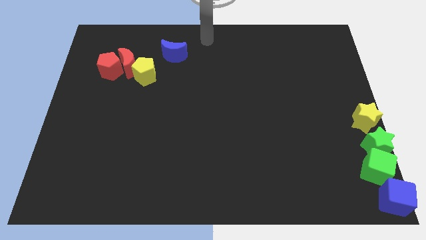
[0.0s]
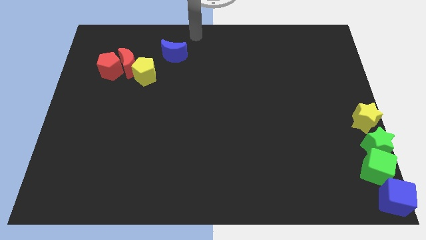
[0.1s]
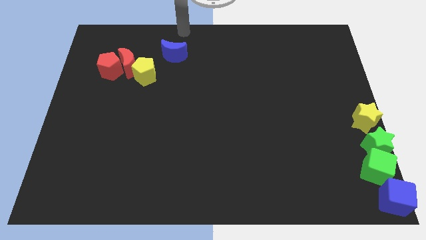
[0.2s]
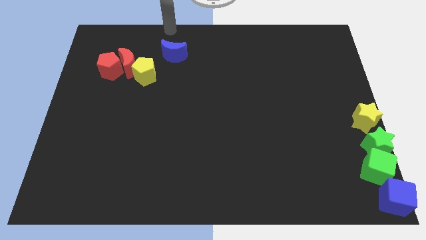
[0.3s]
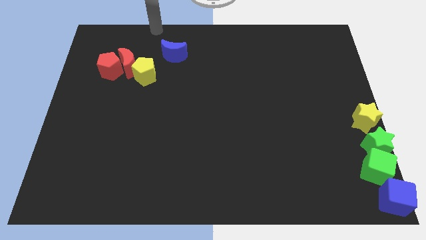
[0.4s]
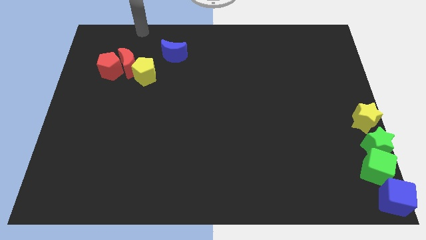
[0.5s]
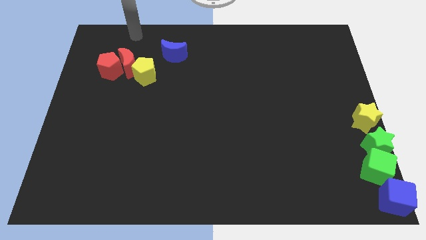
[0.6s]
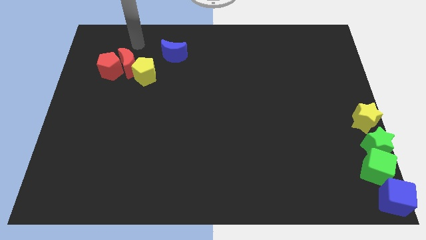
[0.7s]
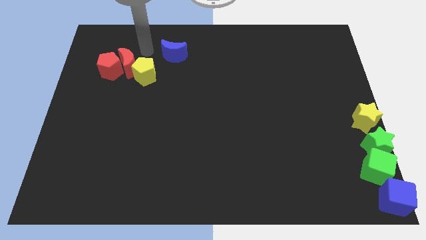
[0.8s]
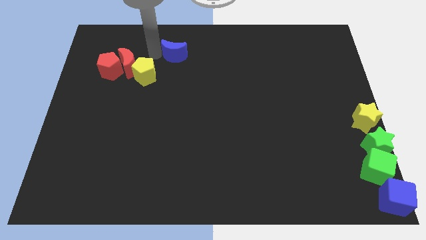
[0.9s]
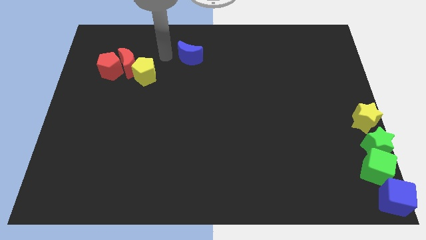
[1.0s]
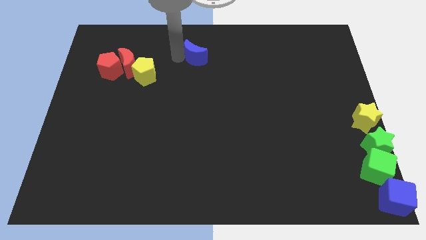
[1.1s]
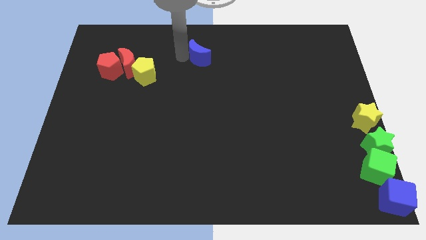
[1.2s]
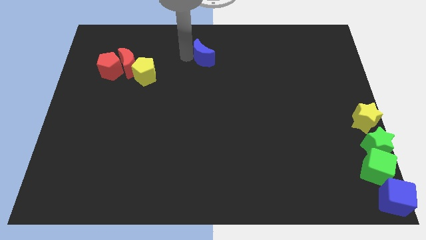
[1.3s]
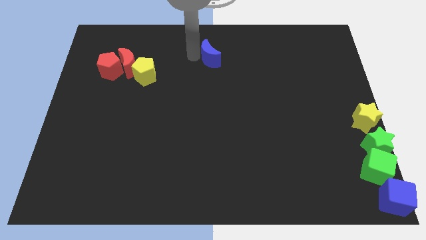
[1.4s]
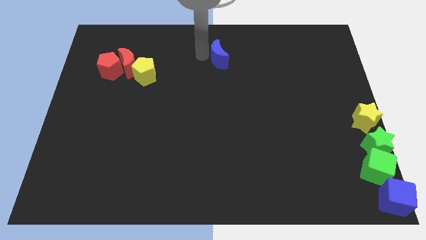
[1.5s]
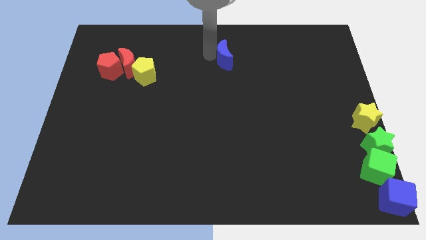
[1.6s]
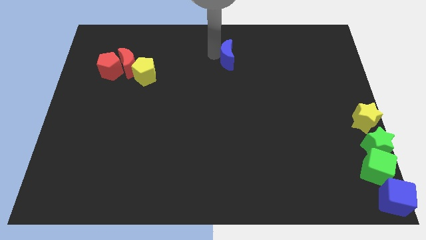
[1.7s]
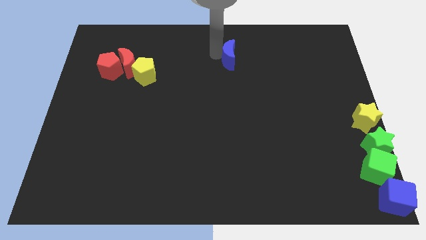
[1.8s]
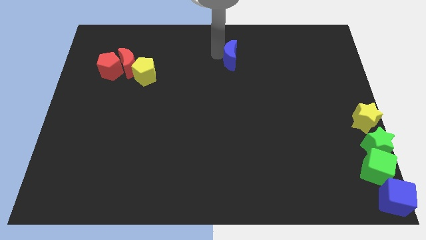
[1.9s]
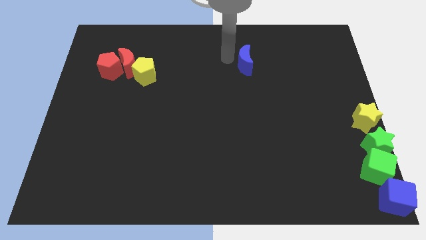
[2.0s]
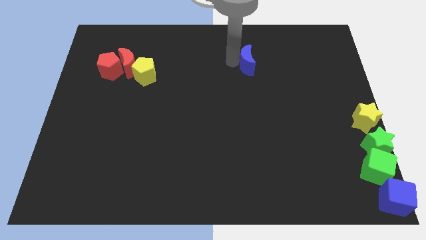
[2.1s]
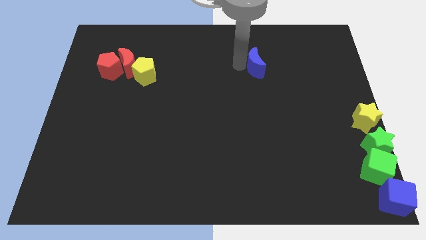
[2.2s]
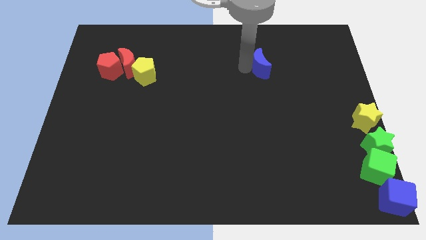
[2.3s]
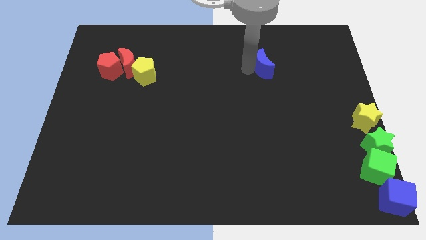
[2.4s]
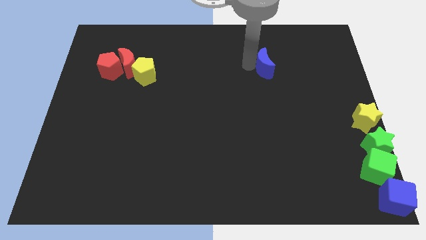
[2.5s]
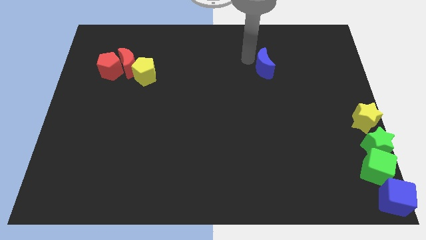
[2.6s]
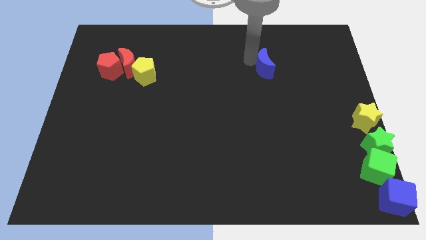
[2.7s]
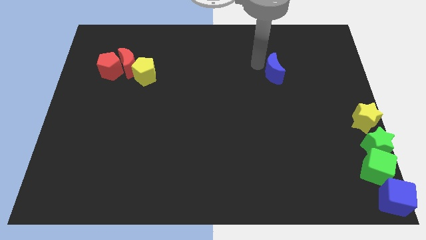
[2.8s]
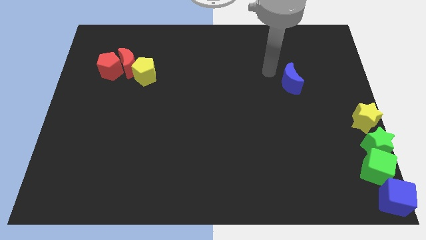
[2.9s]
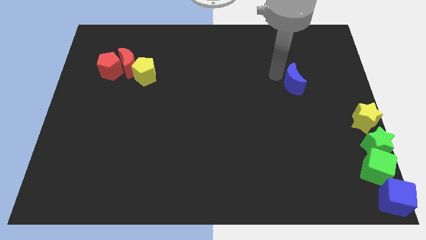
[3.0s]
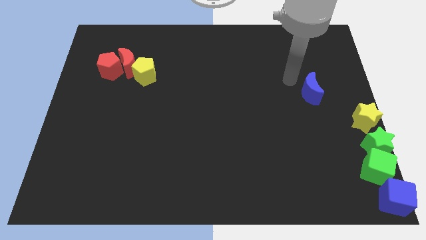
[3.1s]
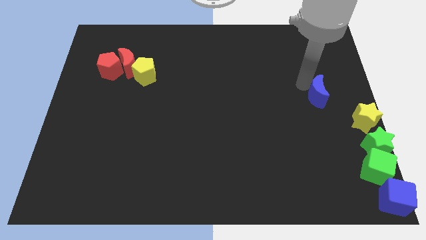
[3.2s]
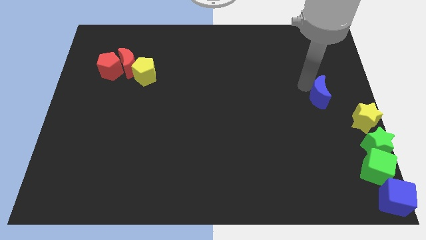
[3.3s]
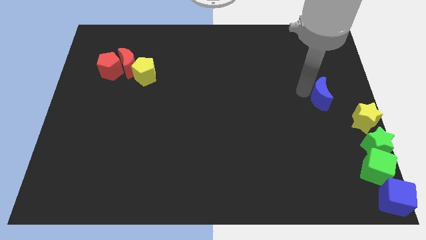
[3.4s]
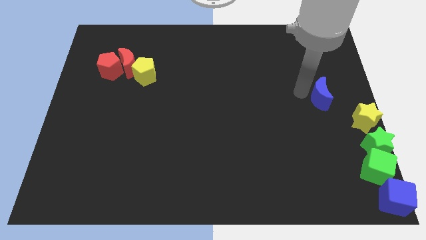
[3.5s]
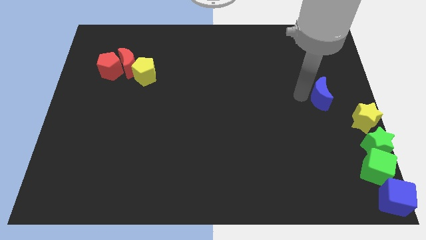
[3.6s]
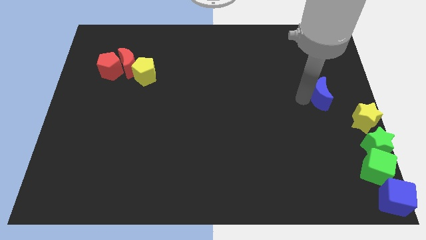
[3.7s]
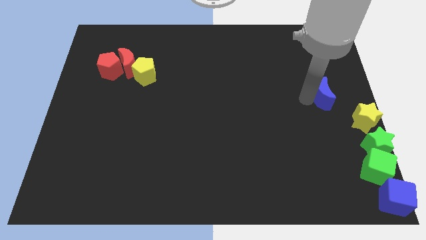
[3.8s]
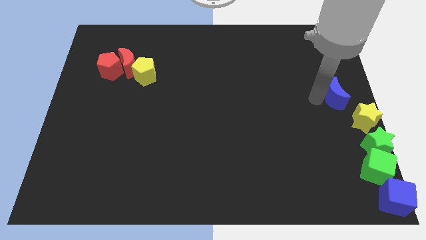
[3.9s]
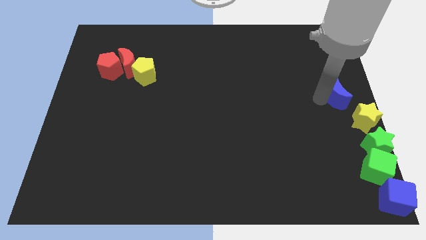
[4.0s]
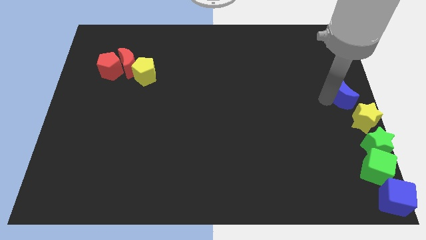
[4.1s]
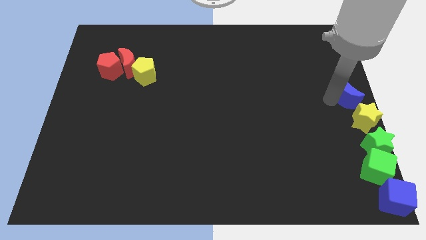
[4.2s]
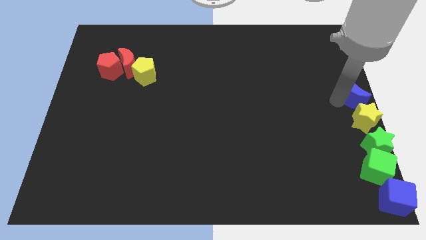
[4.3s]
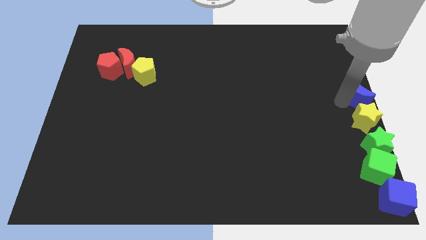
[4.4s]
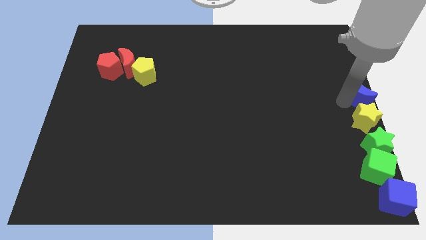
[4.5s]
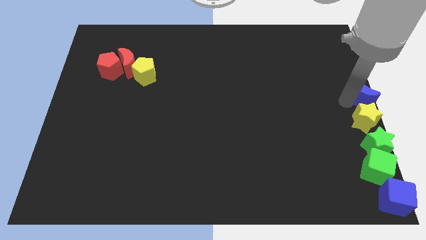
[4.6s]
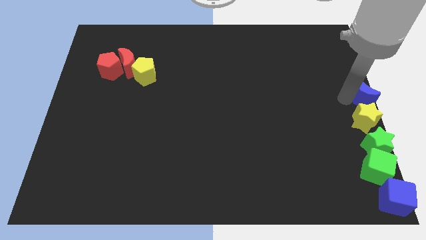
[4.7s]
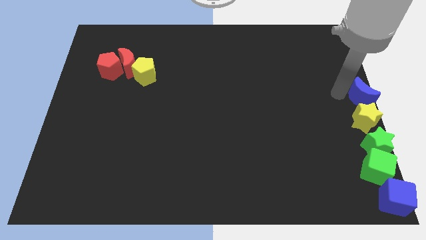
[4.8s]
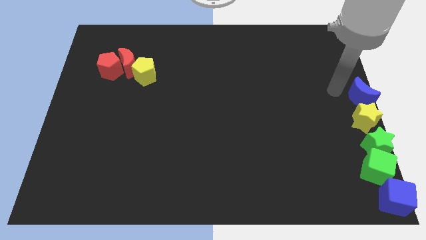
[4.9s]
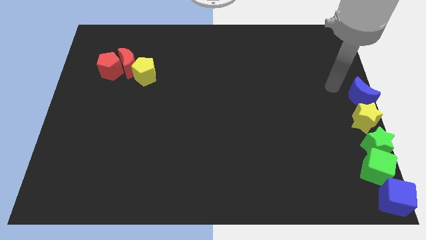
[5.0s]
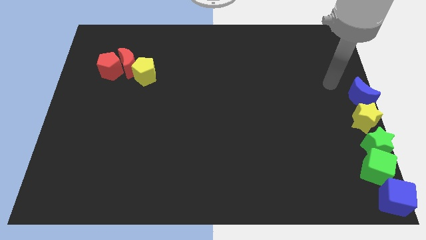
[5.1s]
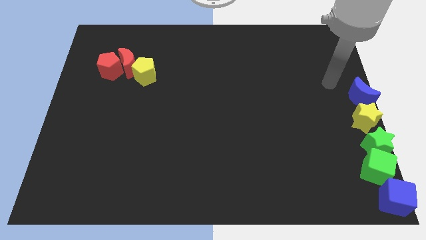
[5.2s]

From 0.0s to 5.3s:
place the blue moon above the yellow star

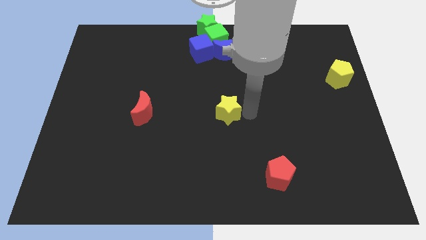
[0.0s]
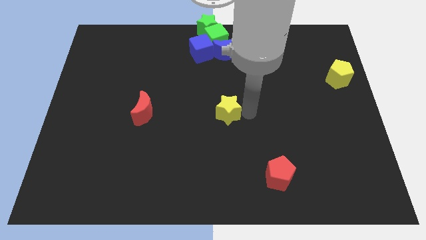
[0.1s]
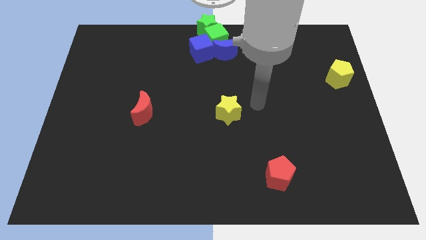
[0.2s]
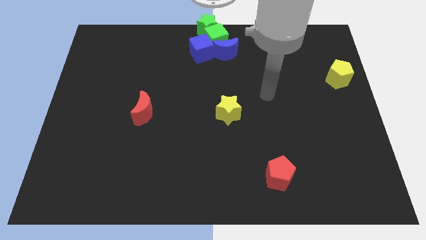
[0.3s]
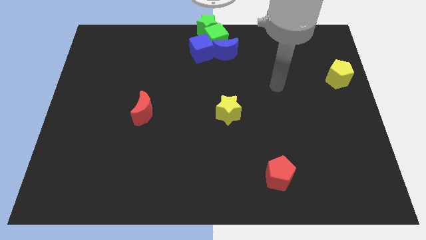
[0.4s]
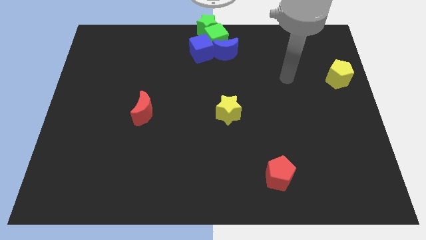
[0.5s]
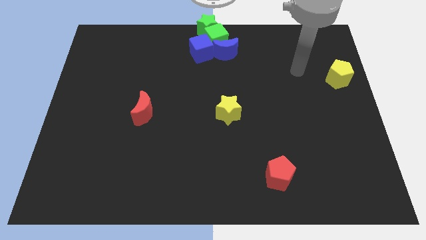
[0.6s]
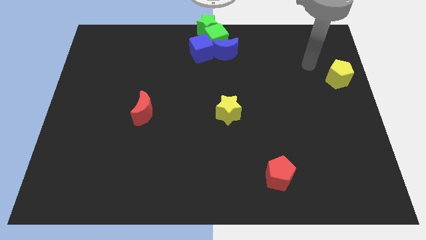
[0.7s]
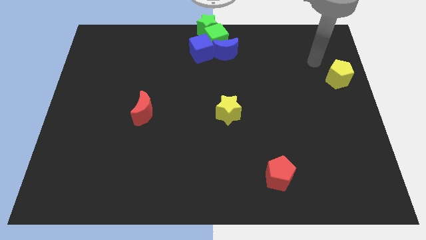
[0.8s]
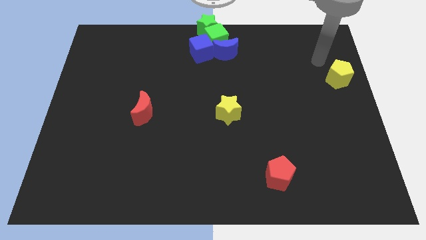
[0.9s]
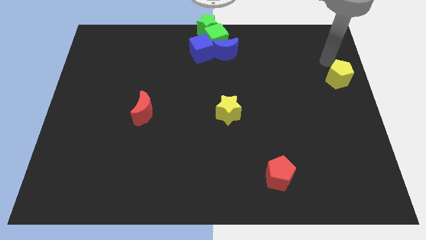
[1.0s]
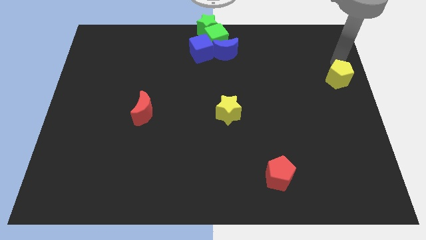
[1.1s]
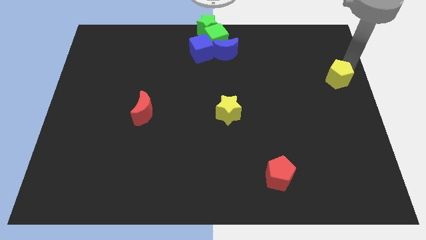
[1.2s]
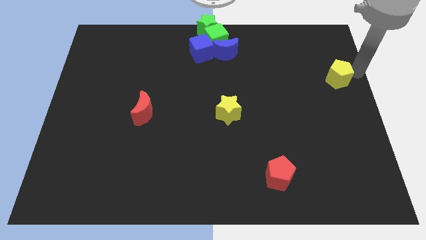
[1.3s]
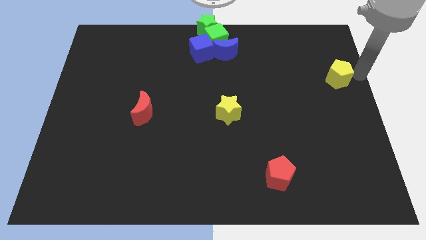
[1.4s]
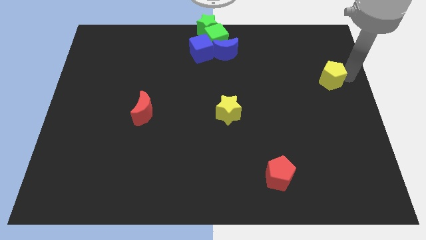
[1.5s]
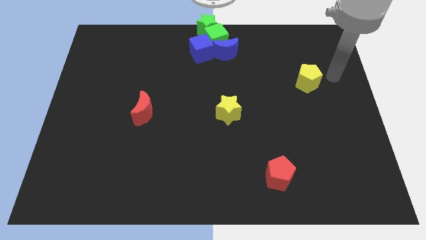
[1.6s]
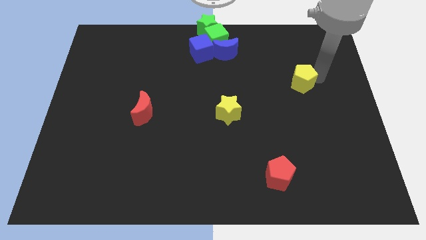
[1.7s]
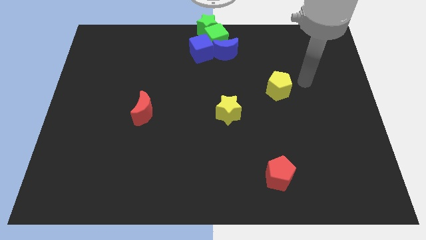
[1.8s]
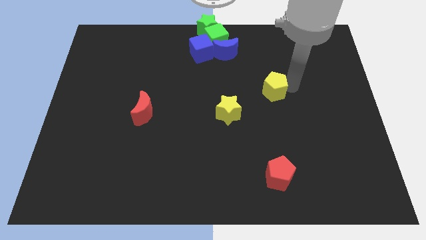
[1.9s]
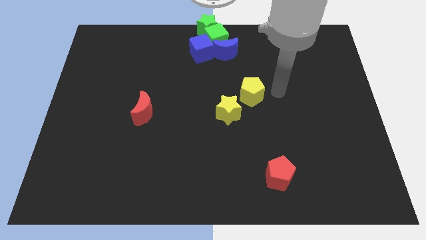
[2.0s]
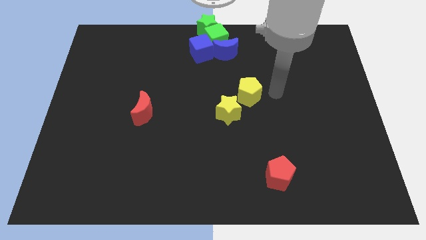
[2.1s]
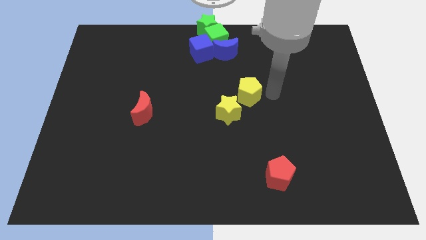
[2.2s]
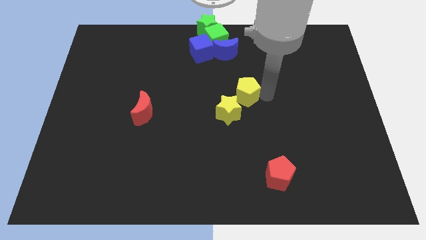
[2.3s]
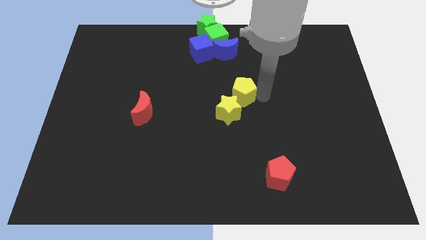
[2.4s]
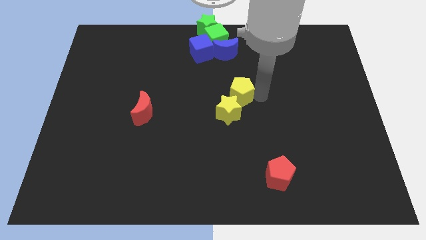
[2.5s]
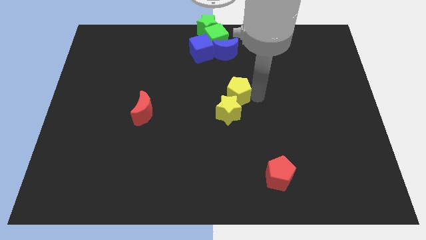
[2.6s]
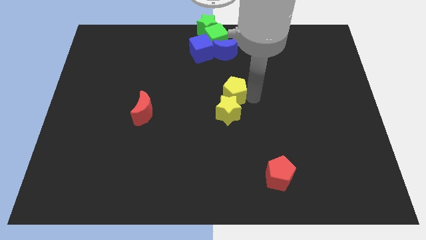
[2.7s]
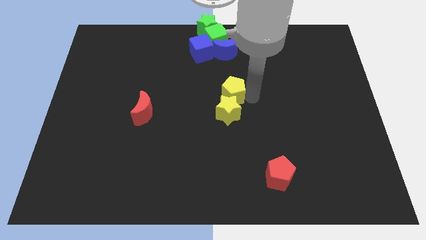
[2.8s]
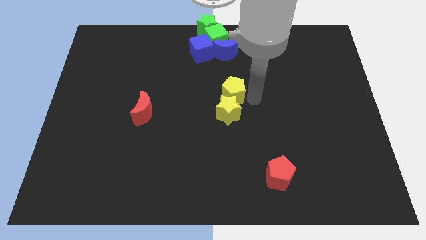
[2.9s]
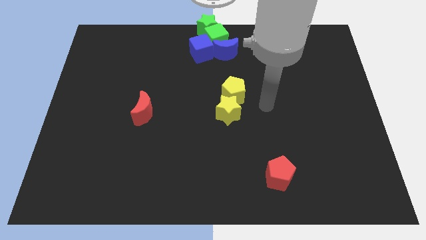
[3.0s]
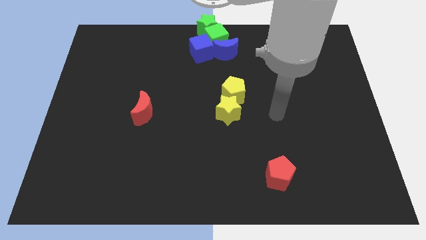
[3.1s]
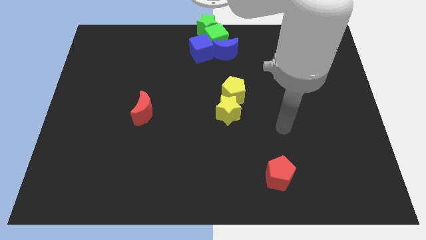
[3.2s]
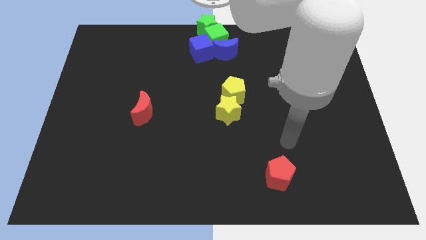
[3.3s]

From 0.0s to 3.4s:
move the yellow pentagon to the top of the yellow star
